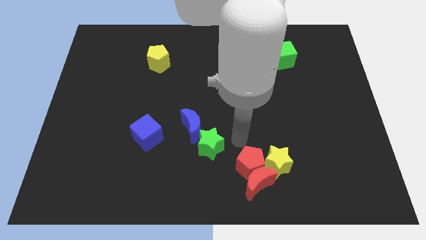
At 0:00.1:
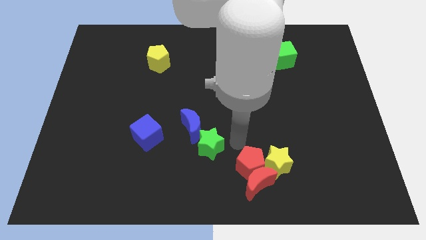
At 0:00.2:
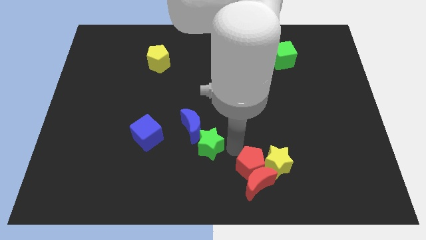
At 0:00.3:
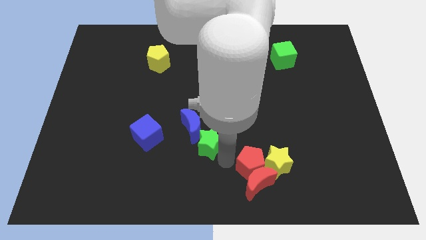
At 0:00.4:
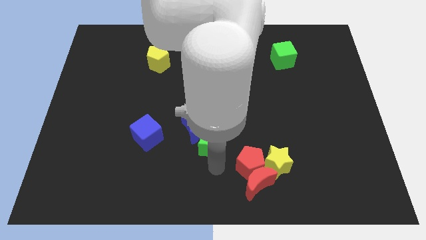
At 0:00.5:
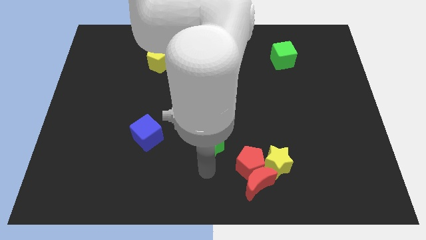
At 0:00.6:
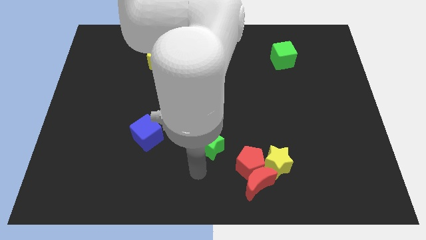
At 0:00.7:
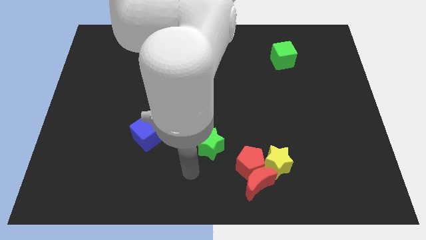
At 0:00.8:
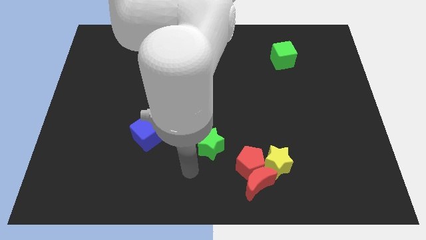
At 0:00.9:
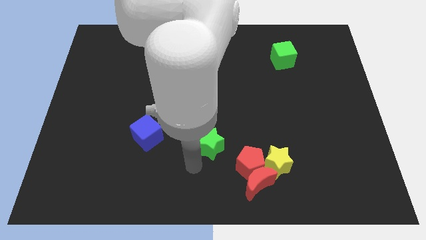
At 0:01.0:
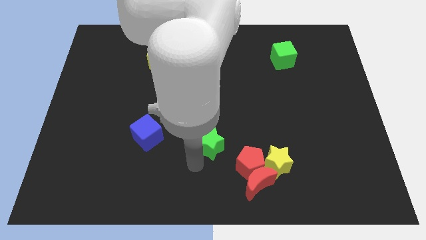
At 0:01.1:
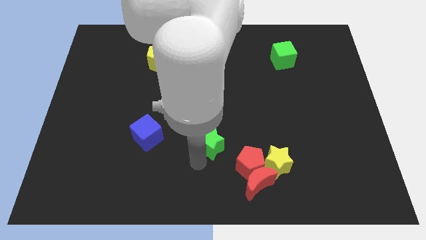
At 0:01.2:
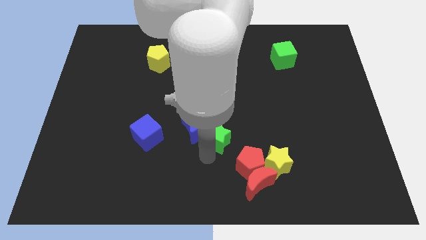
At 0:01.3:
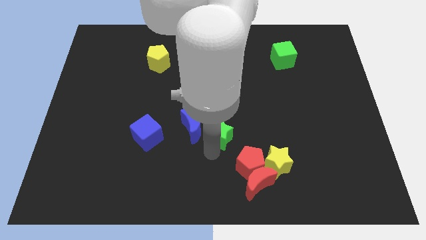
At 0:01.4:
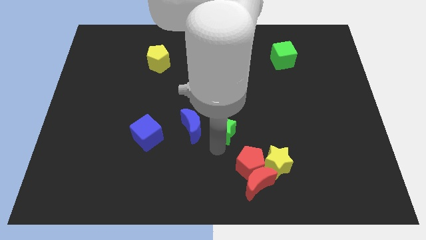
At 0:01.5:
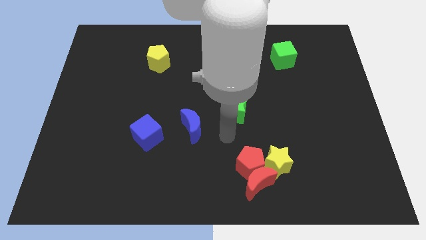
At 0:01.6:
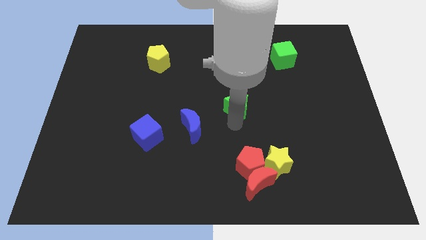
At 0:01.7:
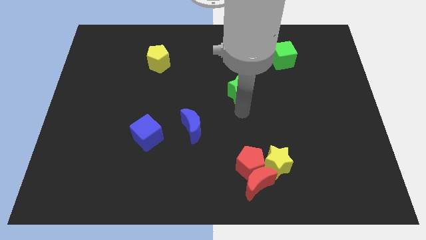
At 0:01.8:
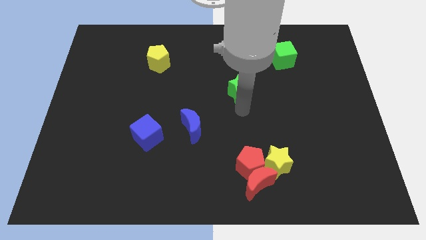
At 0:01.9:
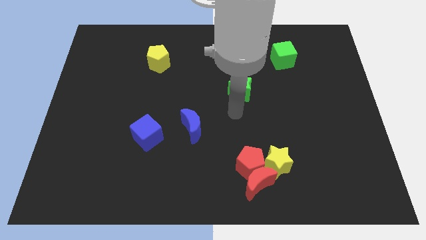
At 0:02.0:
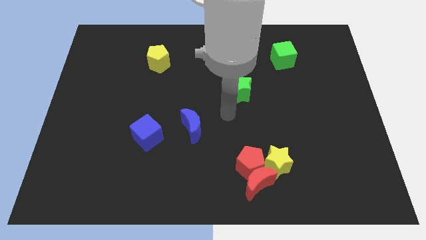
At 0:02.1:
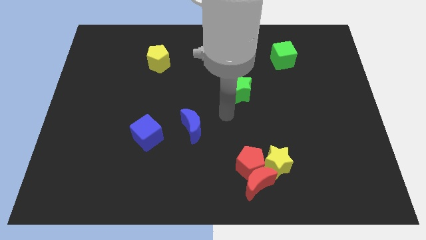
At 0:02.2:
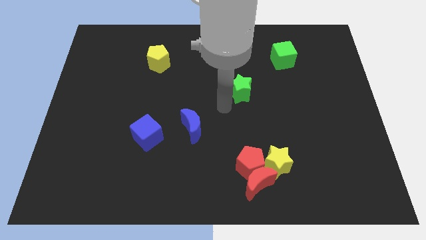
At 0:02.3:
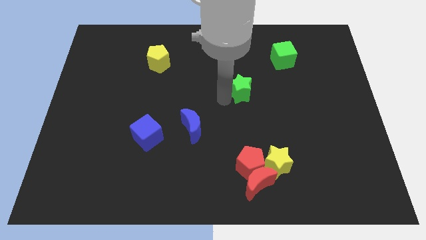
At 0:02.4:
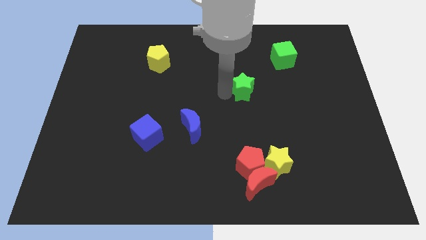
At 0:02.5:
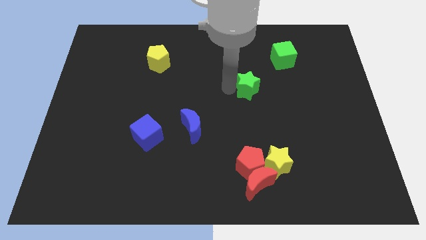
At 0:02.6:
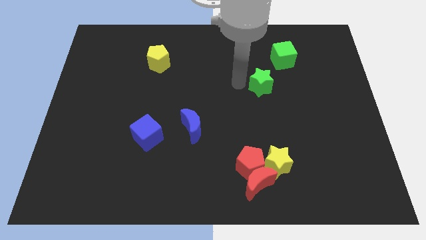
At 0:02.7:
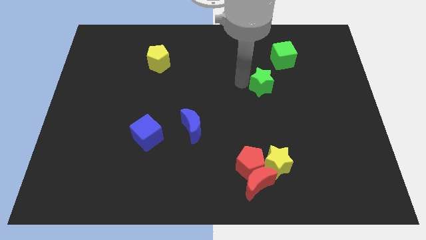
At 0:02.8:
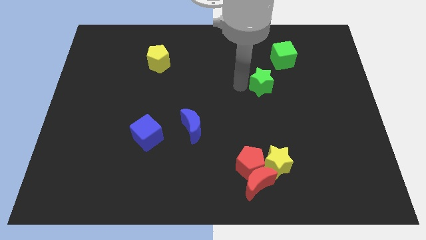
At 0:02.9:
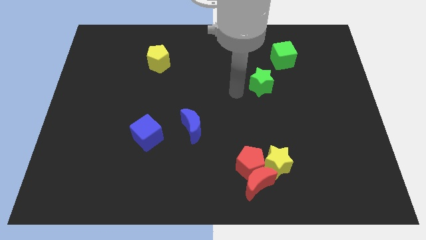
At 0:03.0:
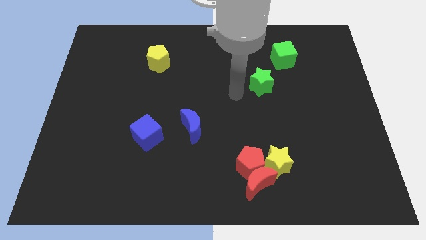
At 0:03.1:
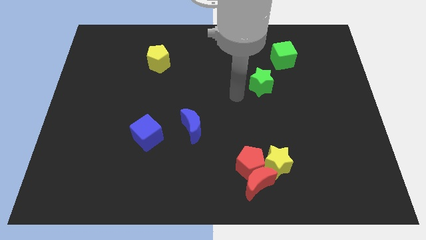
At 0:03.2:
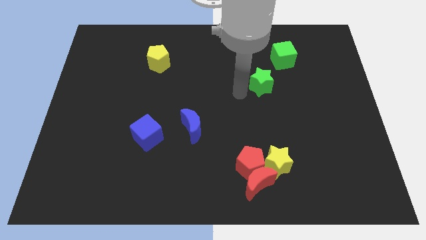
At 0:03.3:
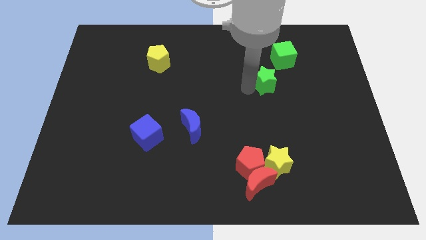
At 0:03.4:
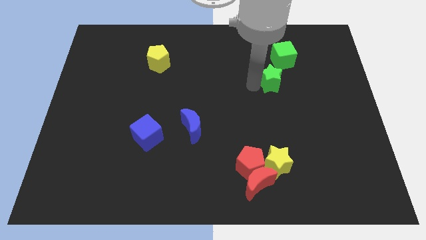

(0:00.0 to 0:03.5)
push the green star to the top of the board

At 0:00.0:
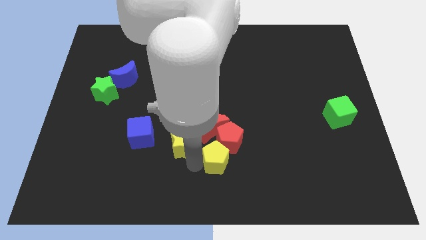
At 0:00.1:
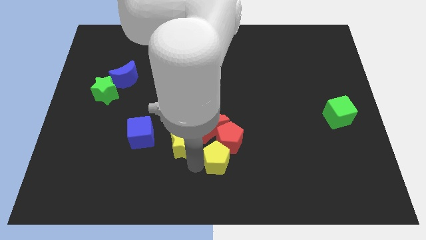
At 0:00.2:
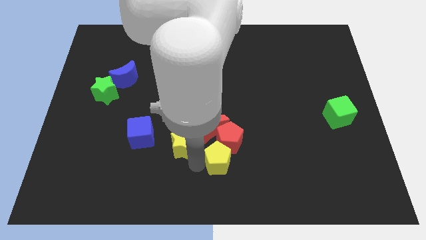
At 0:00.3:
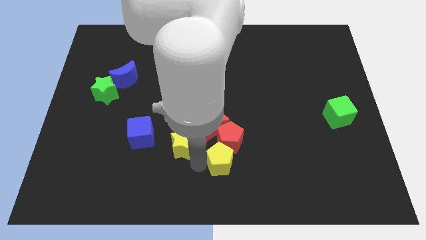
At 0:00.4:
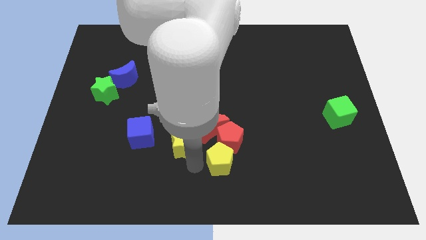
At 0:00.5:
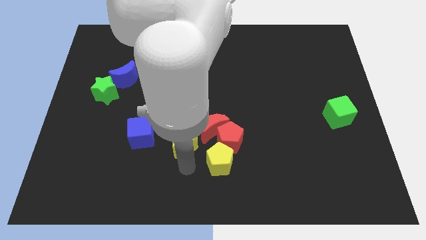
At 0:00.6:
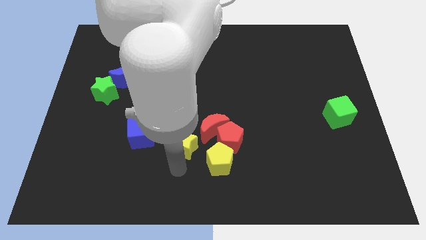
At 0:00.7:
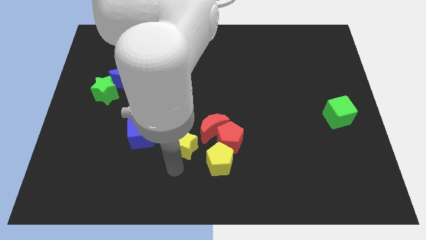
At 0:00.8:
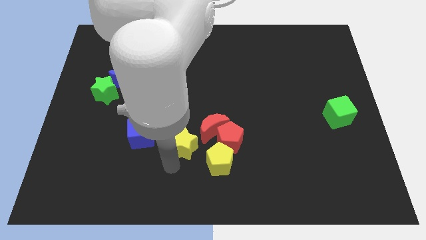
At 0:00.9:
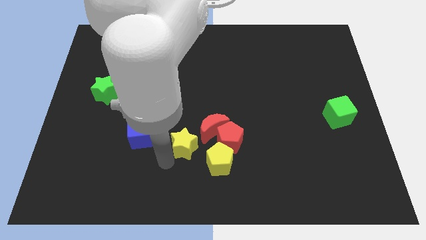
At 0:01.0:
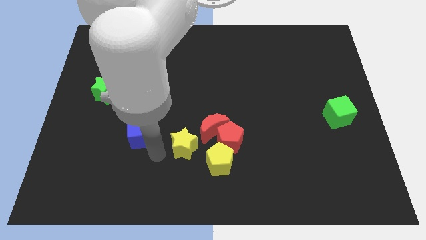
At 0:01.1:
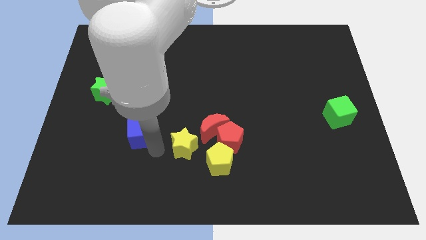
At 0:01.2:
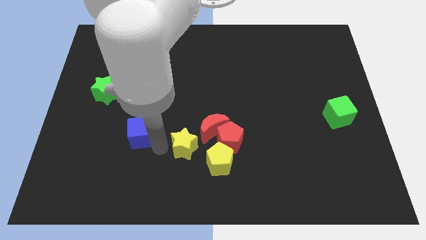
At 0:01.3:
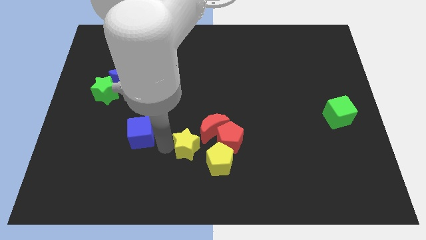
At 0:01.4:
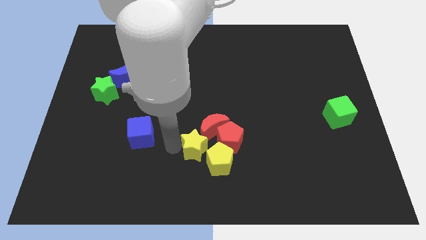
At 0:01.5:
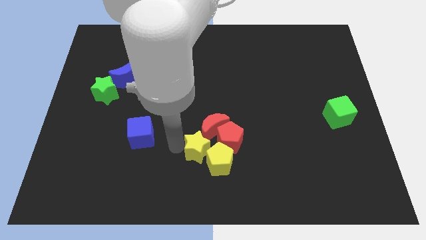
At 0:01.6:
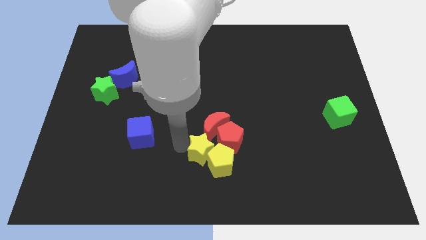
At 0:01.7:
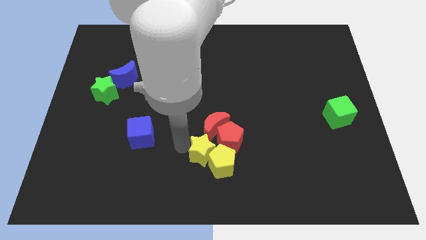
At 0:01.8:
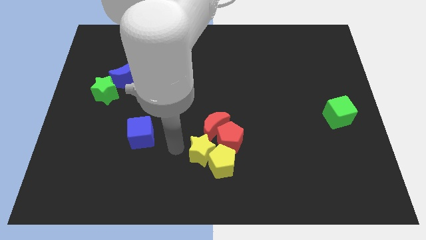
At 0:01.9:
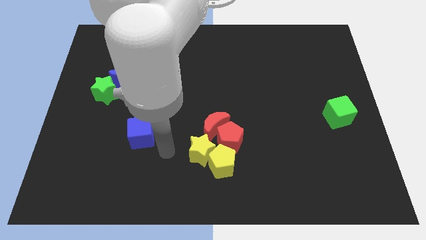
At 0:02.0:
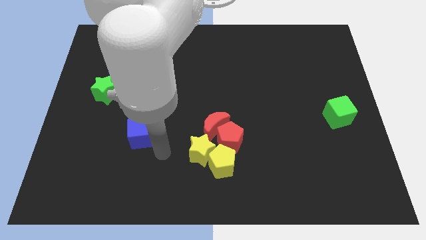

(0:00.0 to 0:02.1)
push the yellow star into the yellow pentagon

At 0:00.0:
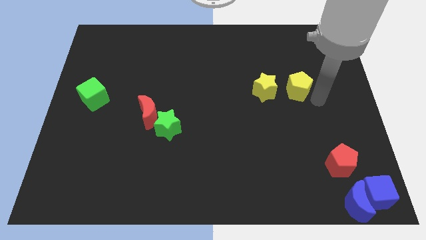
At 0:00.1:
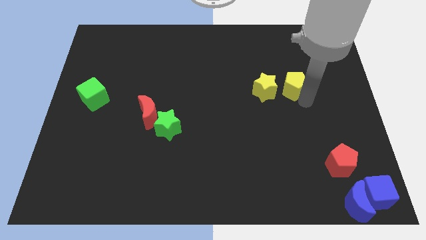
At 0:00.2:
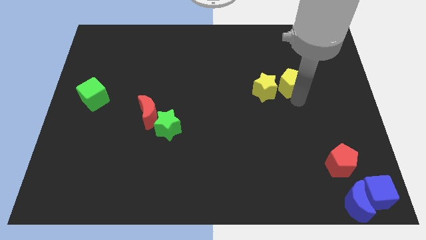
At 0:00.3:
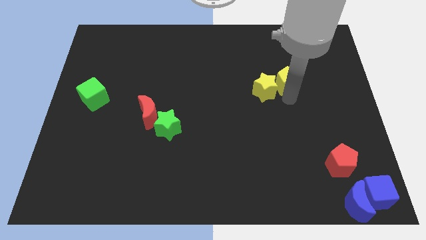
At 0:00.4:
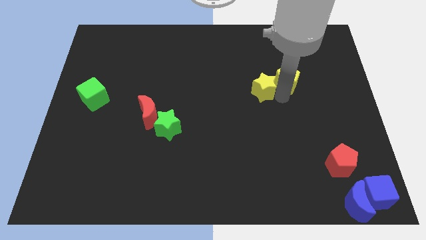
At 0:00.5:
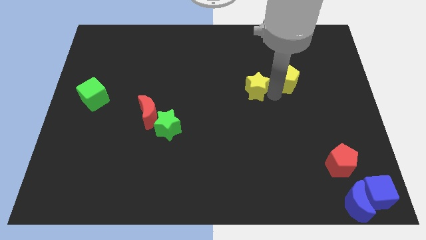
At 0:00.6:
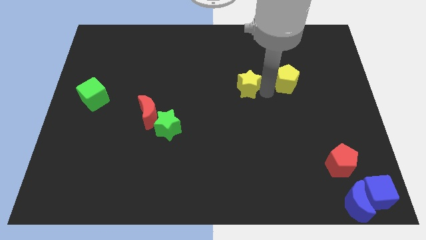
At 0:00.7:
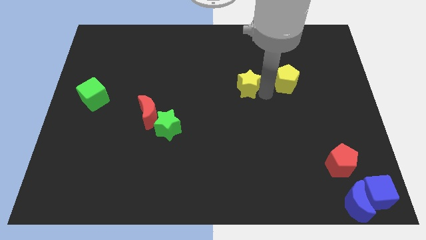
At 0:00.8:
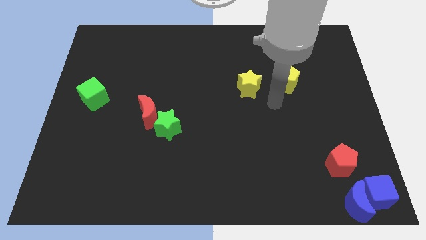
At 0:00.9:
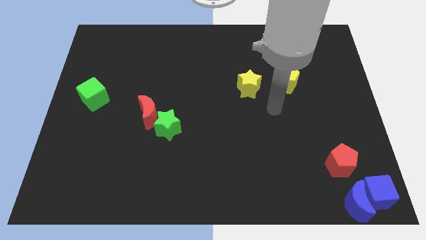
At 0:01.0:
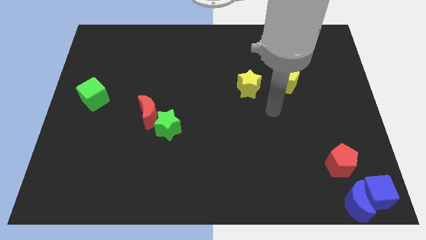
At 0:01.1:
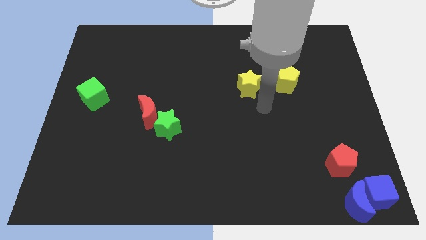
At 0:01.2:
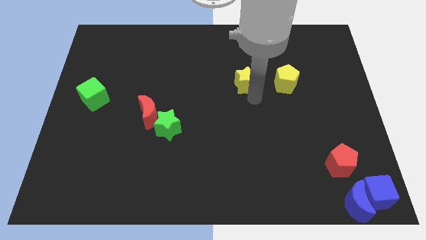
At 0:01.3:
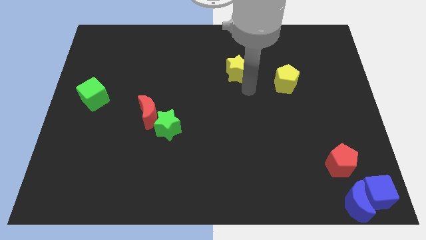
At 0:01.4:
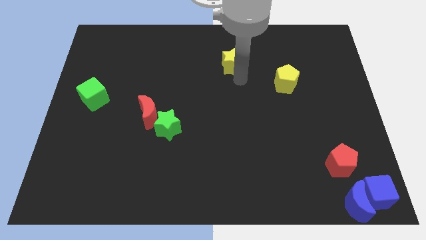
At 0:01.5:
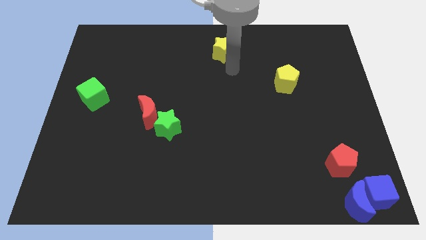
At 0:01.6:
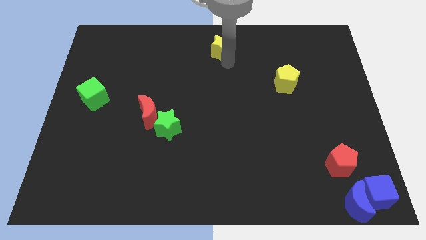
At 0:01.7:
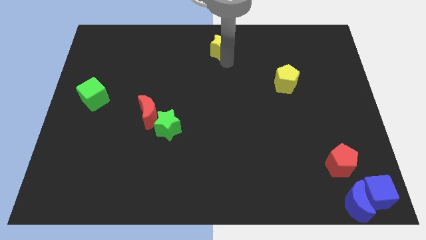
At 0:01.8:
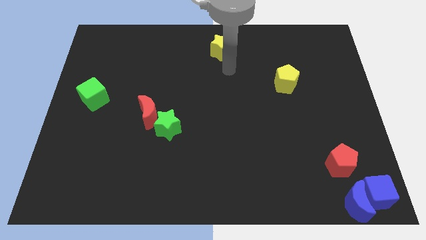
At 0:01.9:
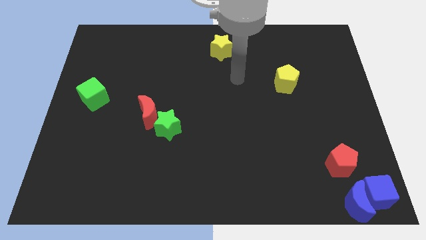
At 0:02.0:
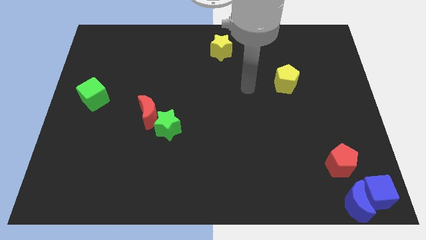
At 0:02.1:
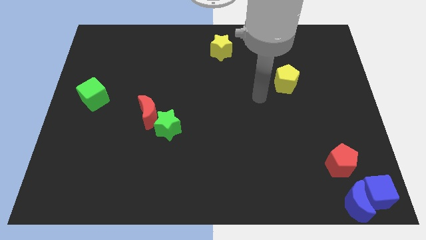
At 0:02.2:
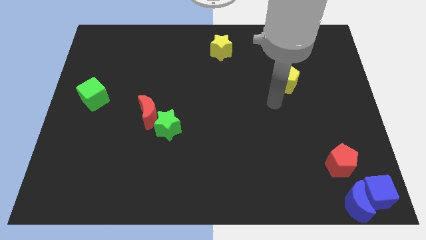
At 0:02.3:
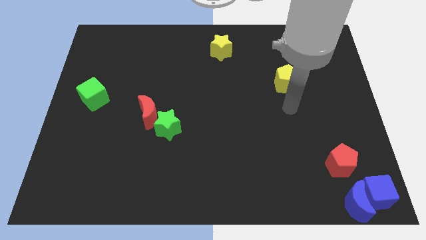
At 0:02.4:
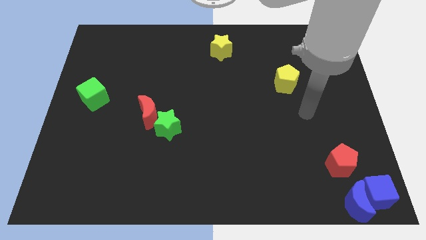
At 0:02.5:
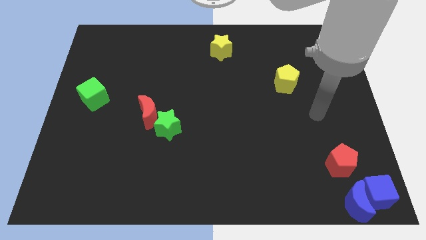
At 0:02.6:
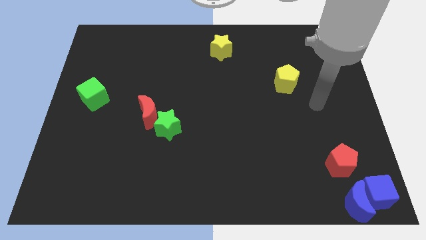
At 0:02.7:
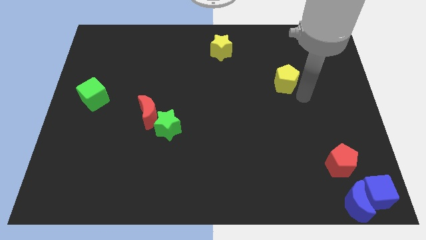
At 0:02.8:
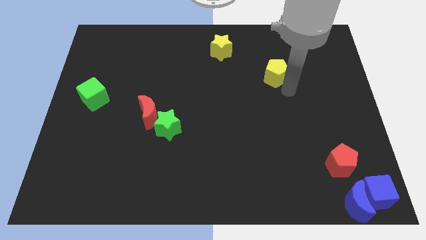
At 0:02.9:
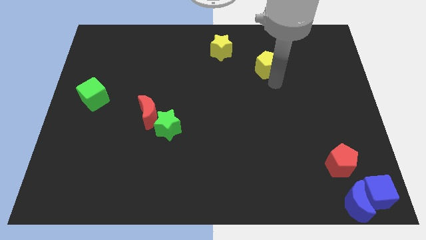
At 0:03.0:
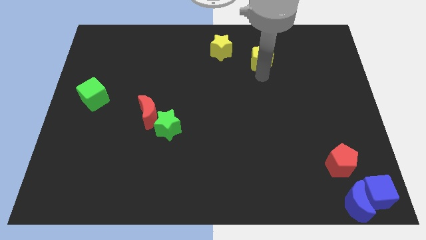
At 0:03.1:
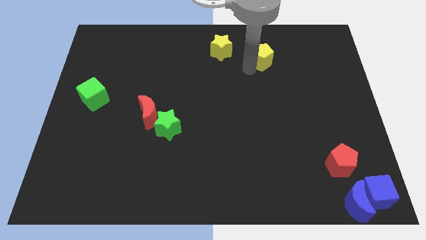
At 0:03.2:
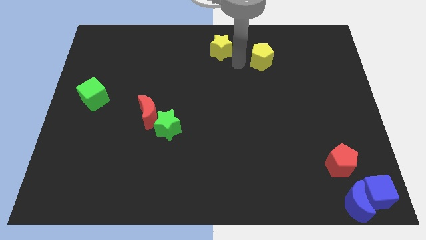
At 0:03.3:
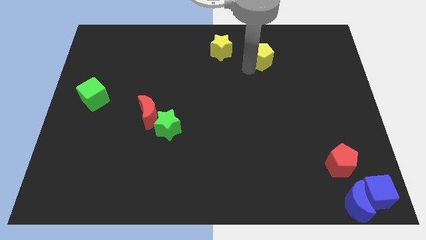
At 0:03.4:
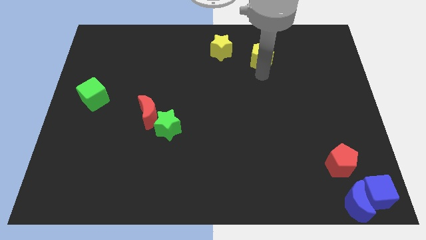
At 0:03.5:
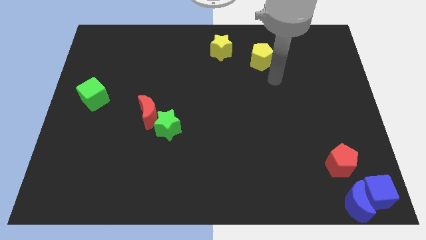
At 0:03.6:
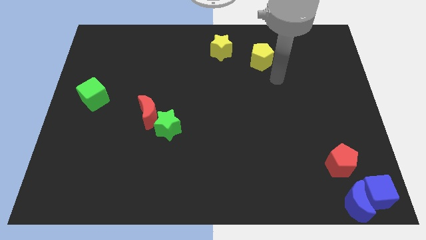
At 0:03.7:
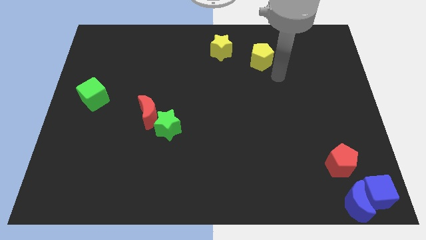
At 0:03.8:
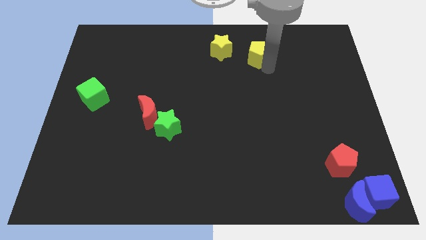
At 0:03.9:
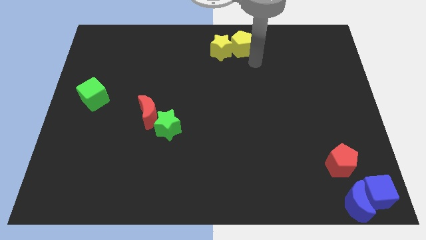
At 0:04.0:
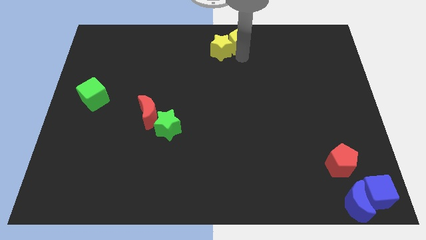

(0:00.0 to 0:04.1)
move the yellow blocks to the top side center
